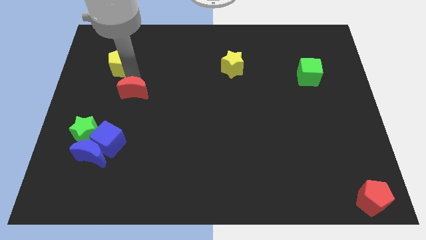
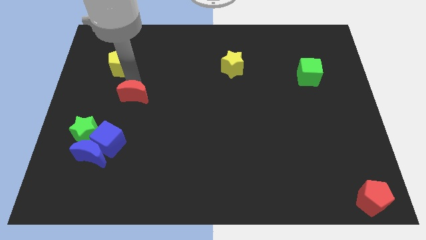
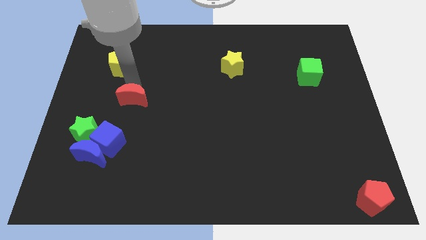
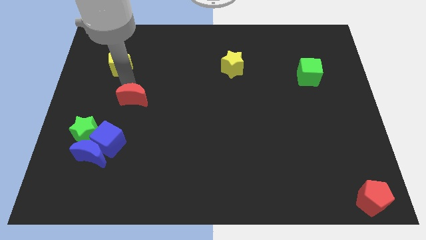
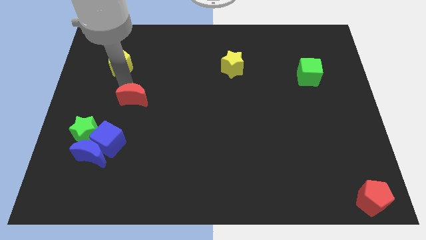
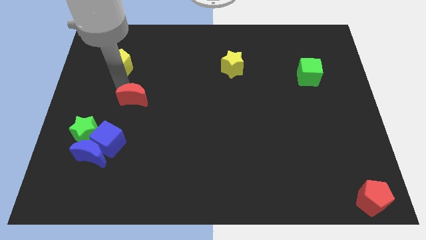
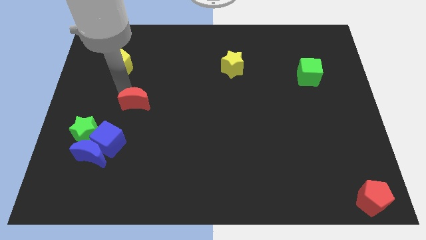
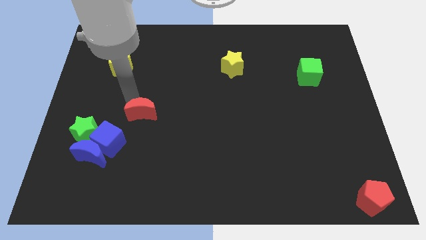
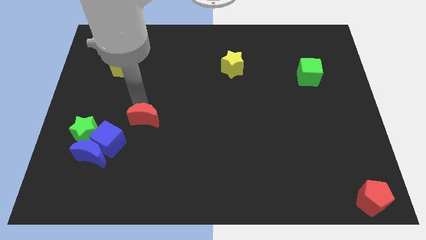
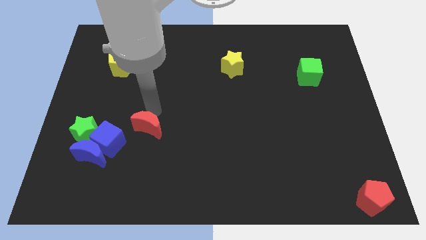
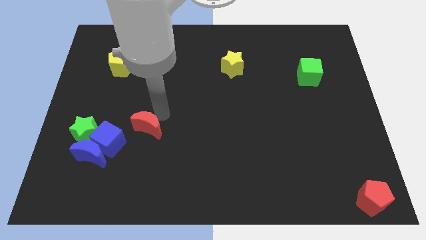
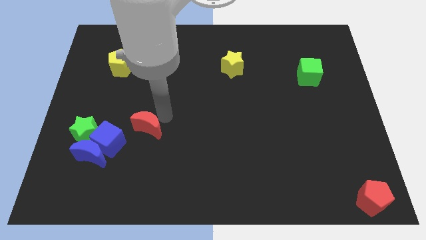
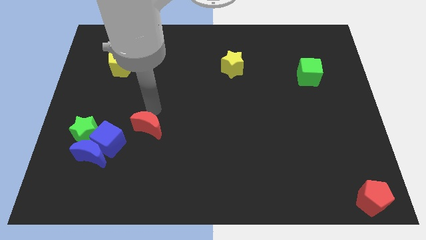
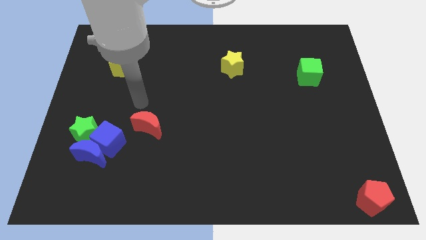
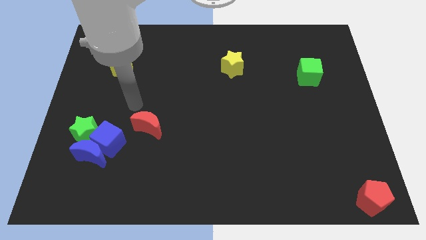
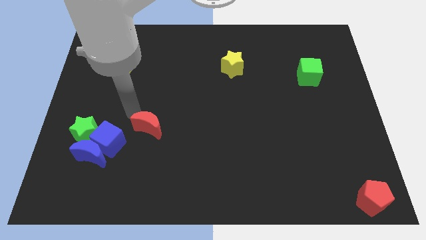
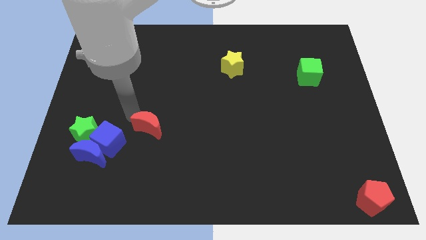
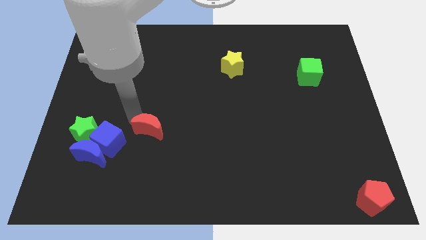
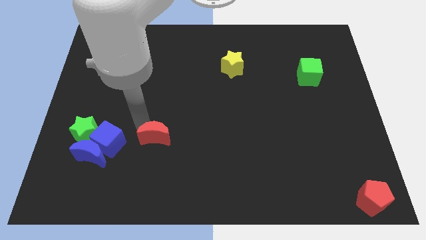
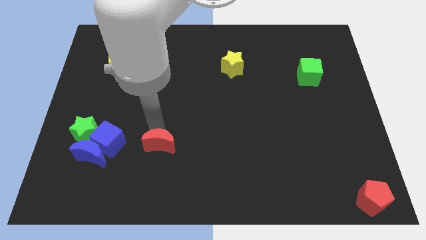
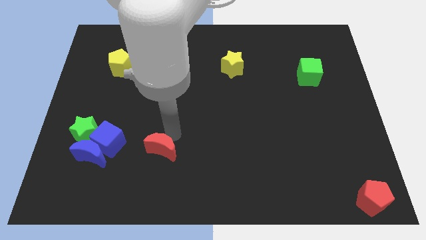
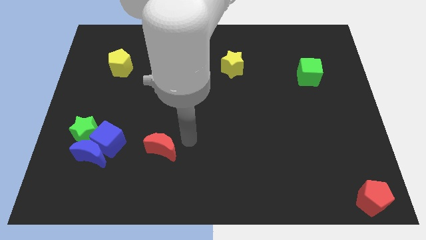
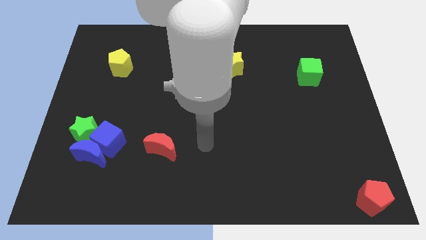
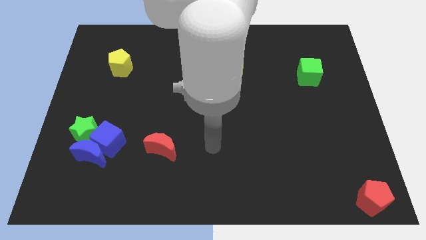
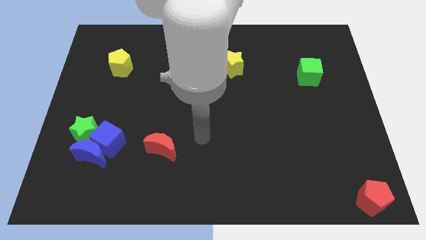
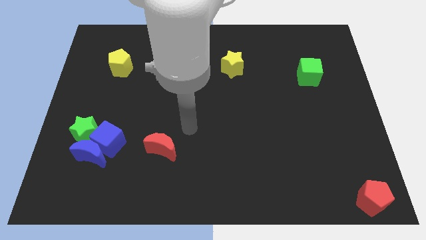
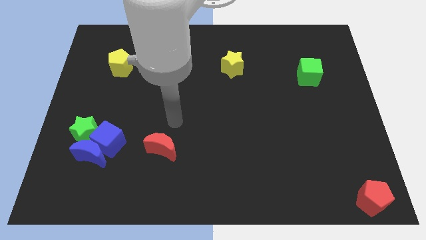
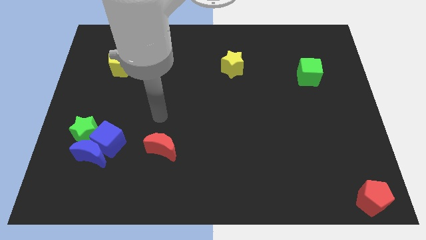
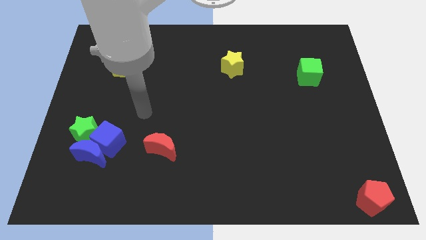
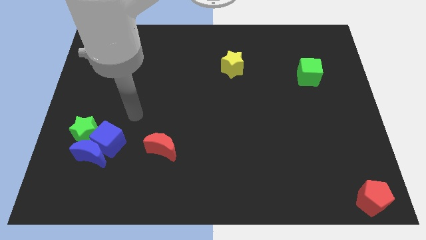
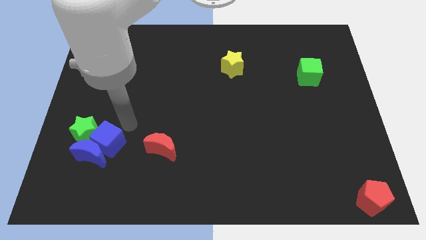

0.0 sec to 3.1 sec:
place red crescent to the right of blue cube

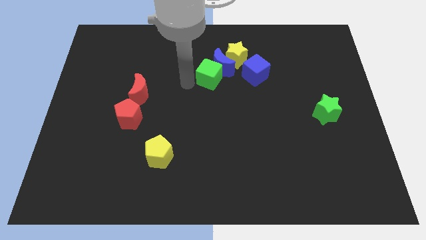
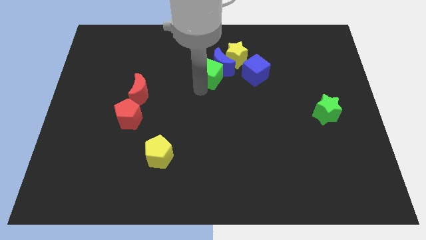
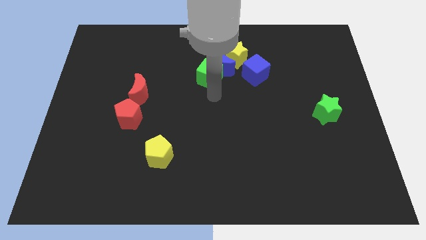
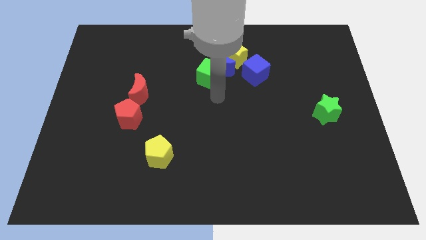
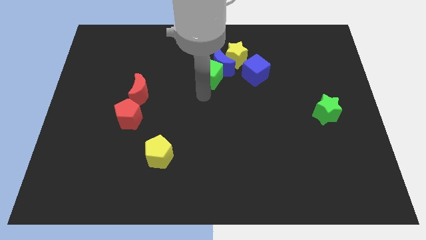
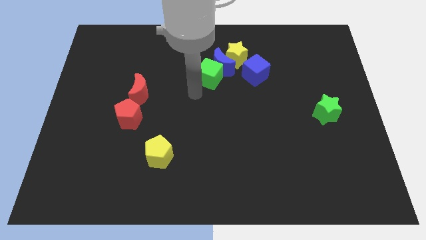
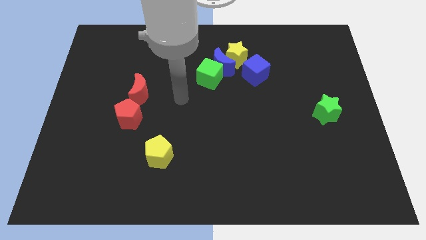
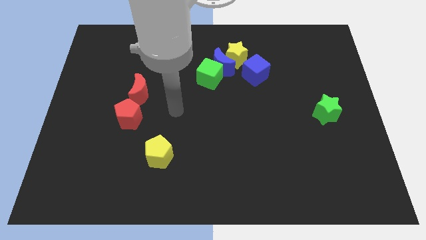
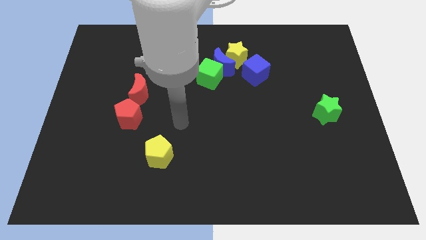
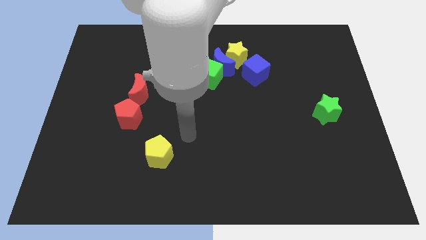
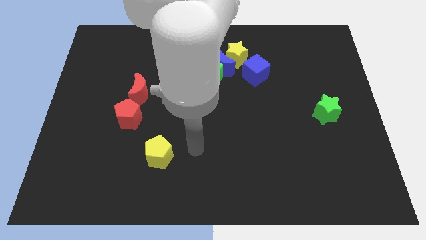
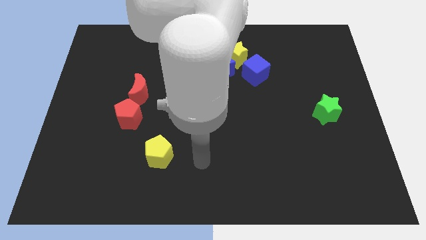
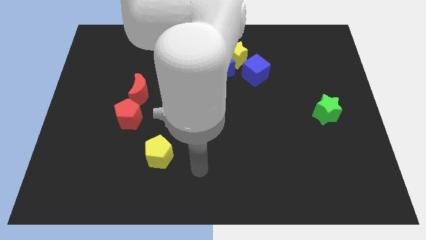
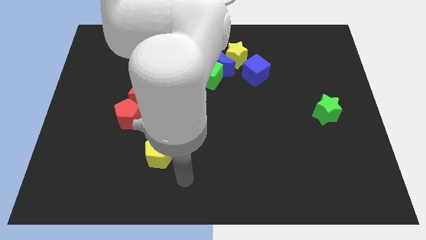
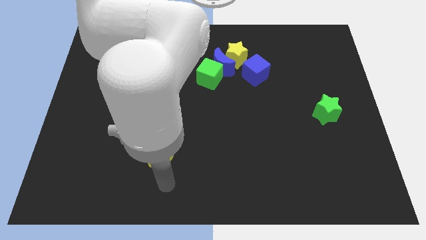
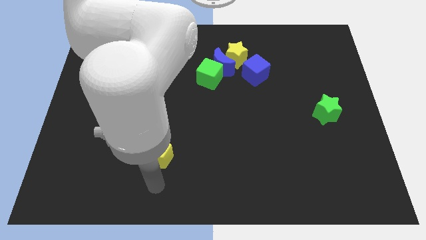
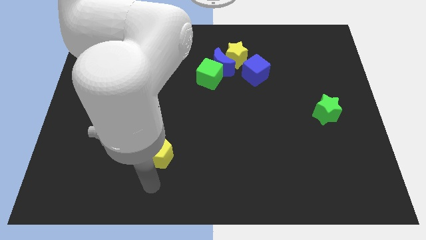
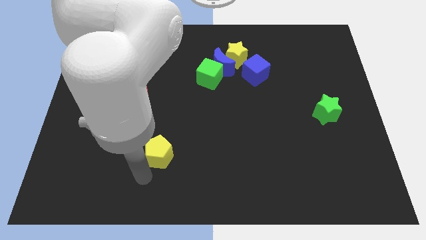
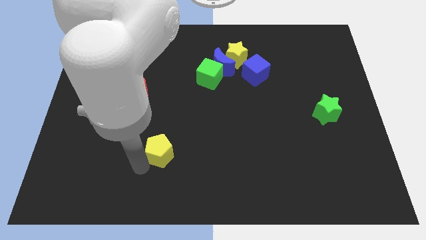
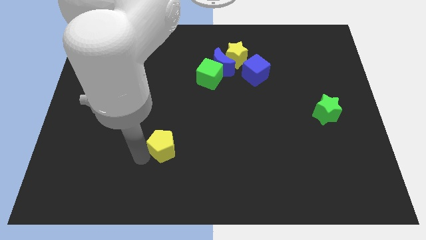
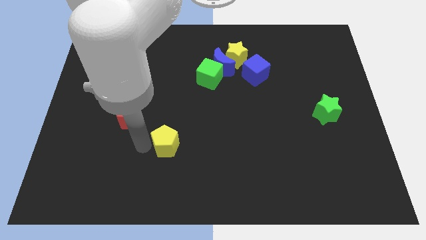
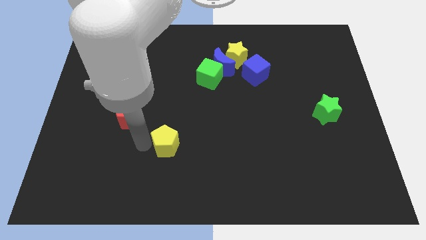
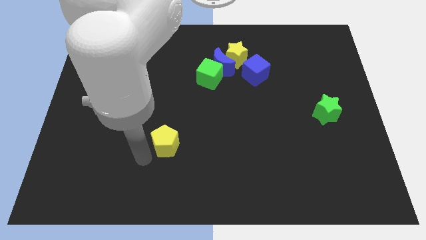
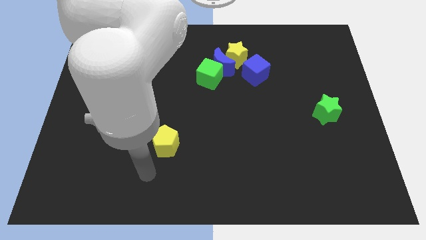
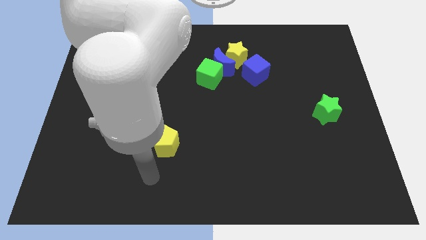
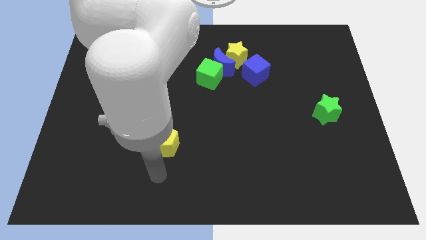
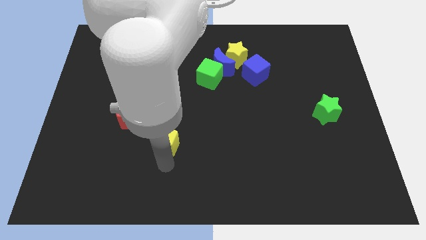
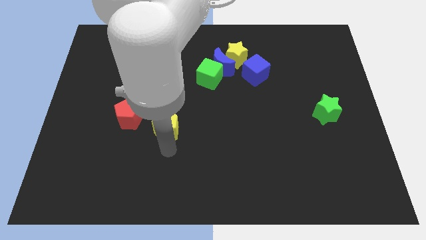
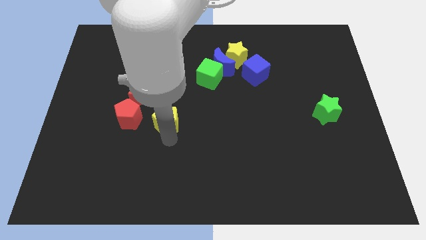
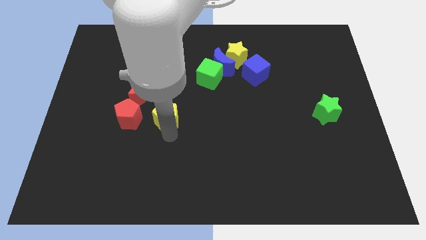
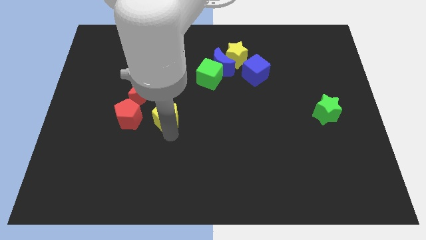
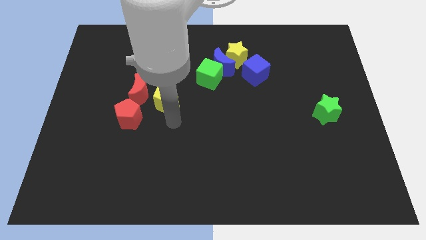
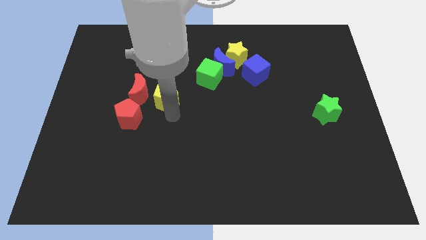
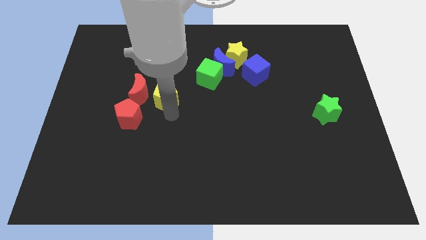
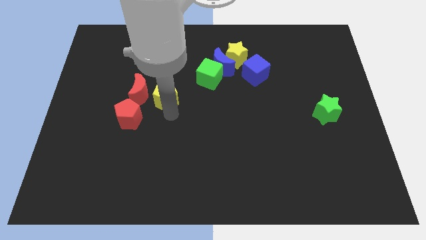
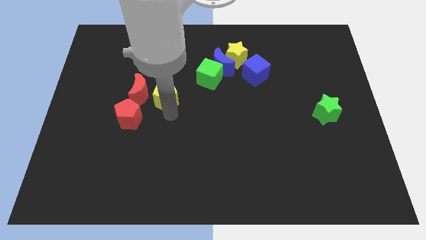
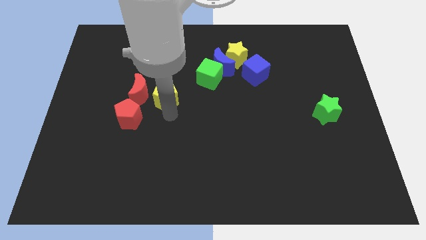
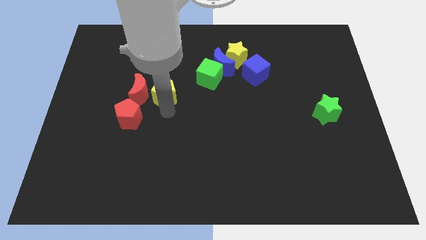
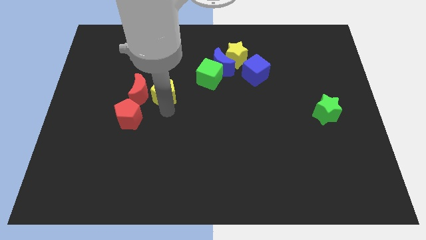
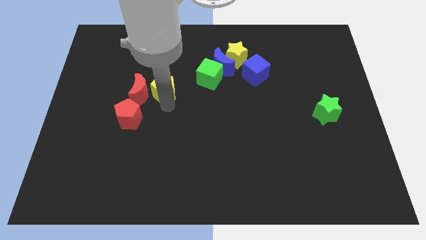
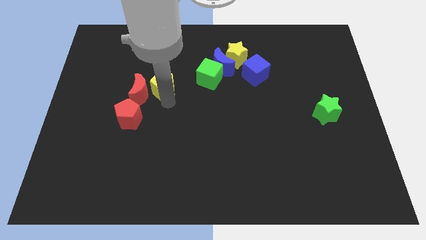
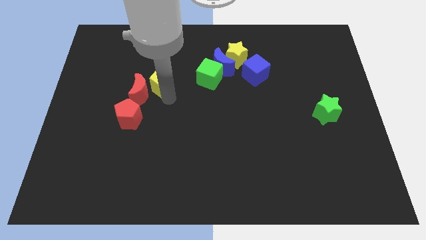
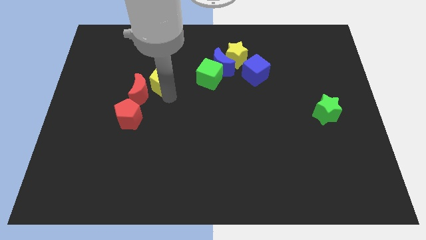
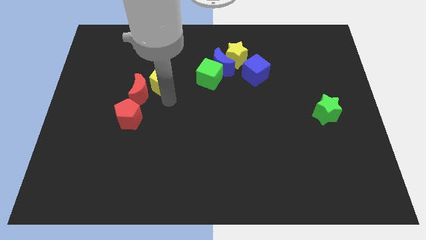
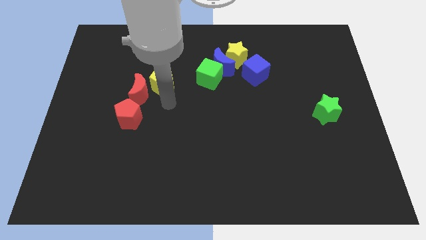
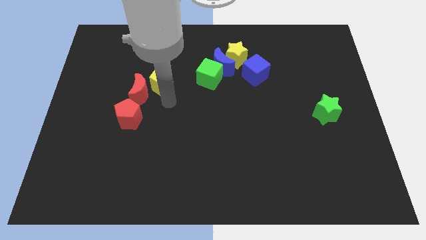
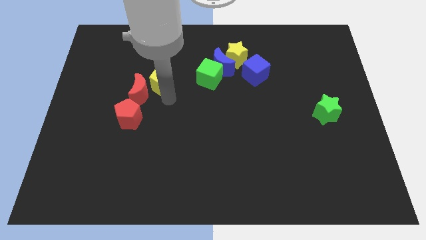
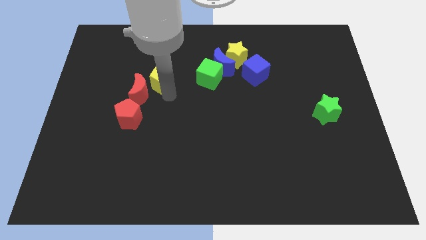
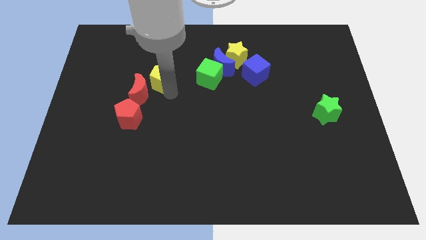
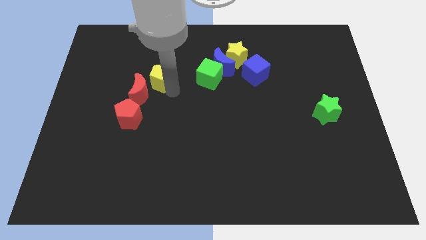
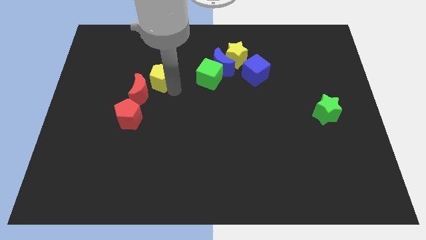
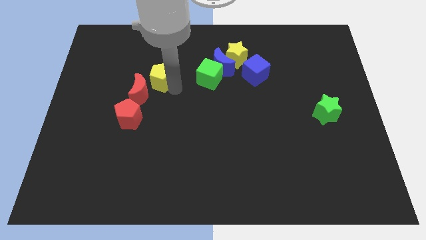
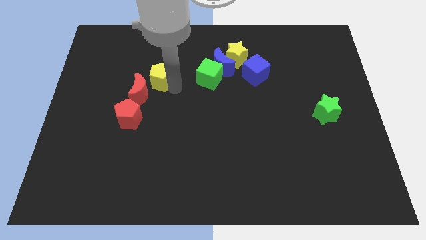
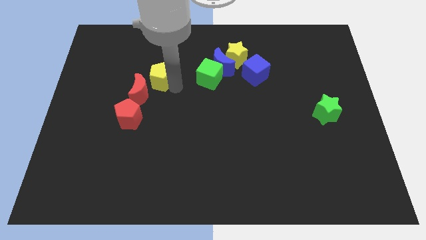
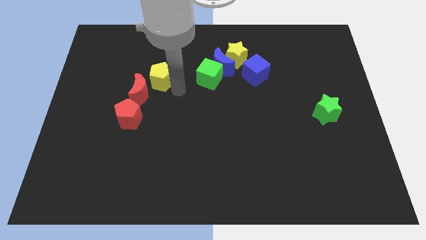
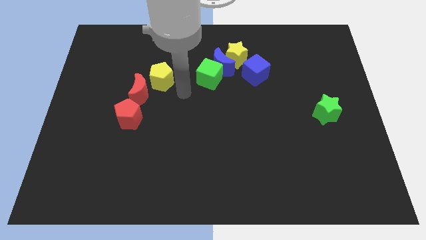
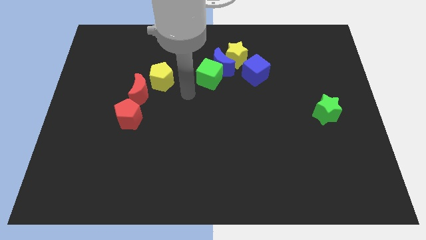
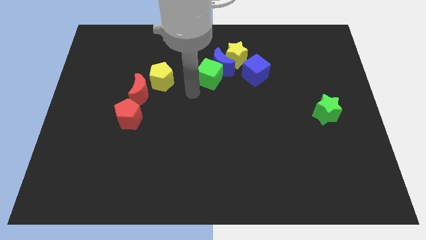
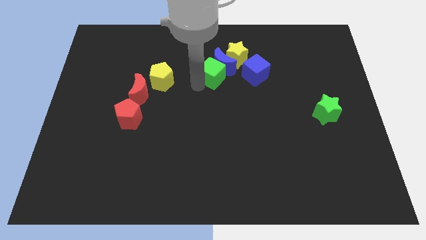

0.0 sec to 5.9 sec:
push yellow pentagon to the top right of the red moon
